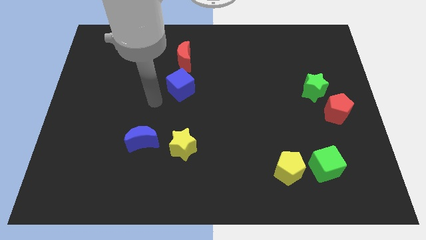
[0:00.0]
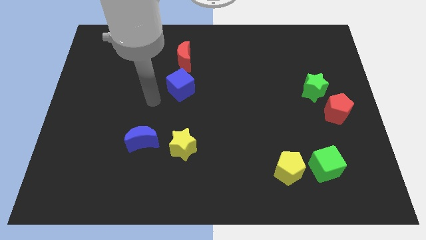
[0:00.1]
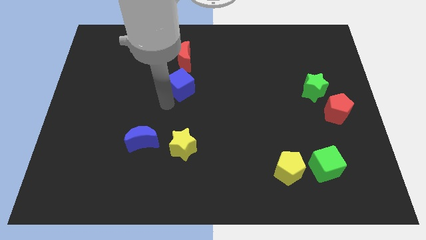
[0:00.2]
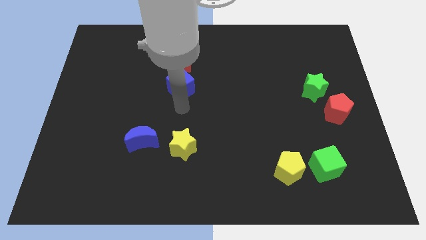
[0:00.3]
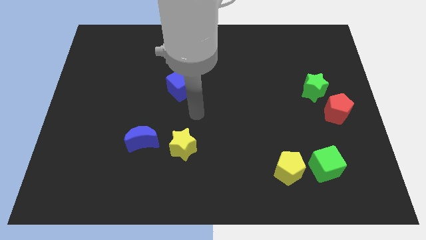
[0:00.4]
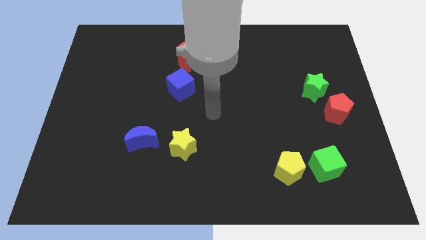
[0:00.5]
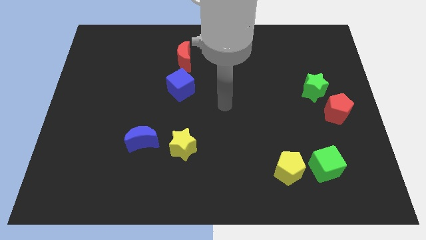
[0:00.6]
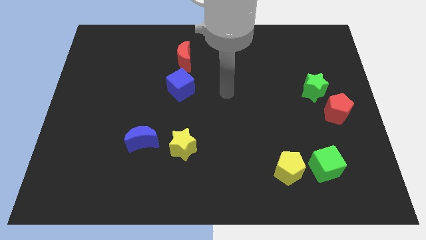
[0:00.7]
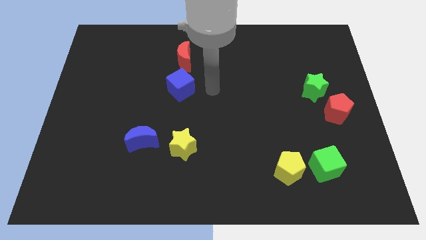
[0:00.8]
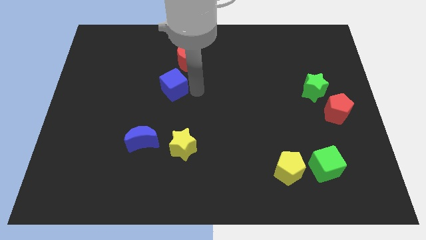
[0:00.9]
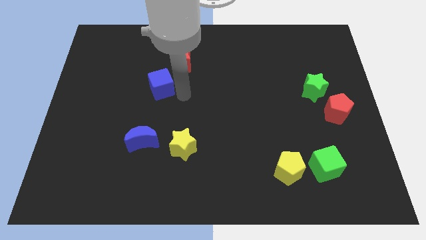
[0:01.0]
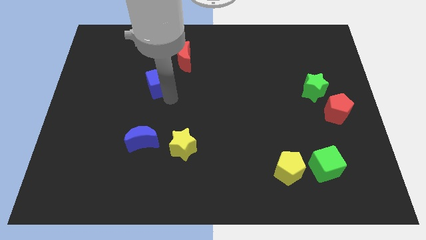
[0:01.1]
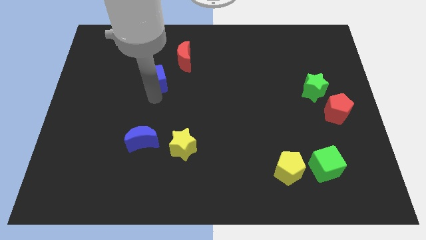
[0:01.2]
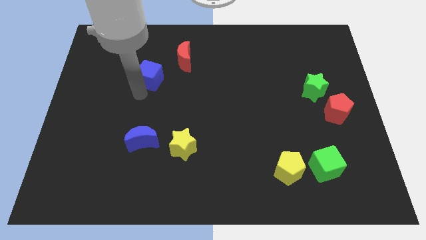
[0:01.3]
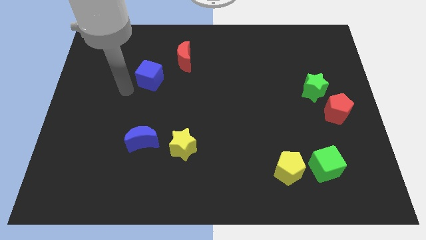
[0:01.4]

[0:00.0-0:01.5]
place blue cube left diagonally towards red crescent

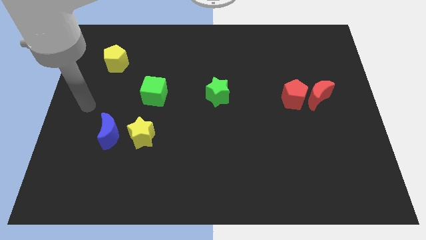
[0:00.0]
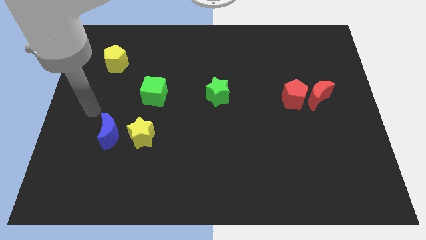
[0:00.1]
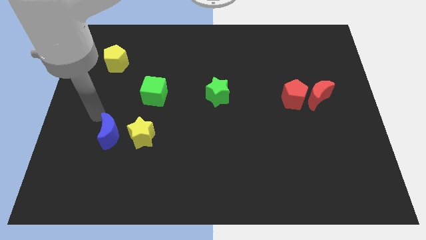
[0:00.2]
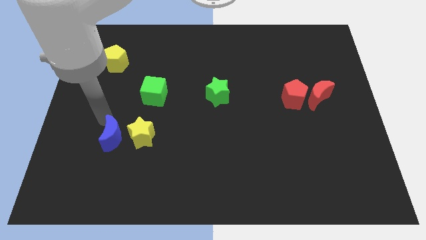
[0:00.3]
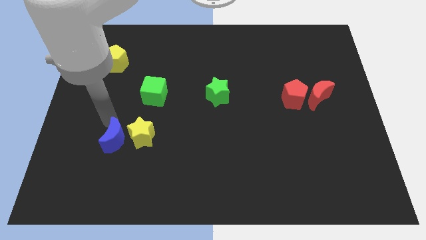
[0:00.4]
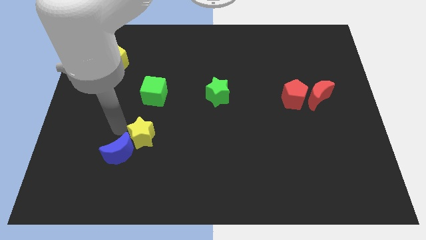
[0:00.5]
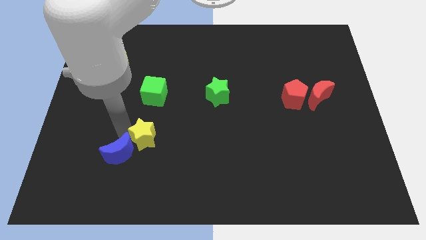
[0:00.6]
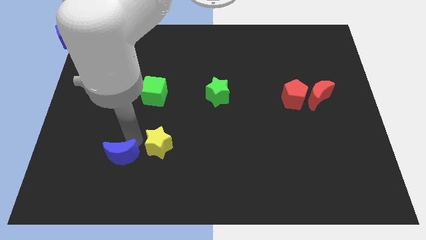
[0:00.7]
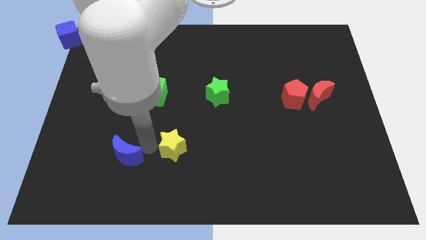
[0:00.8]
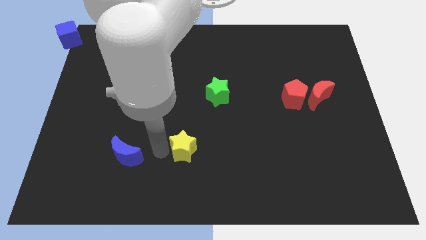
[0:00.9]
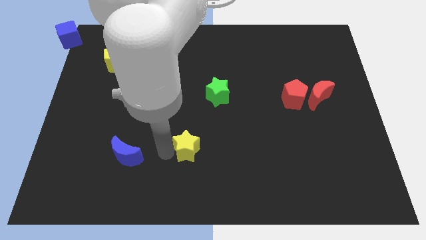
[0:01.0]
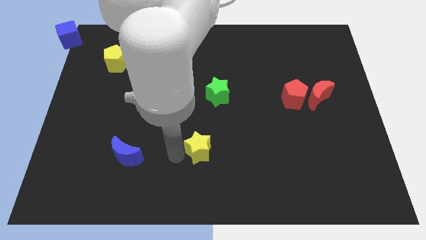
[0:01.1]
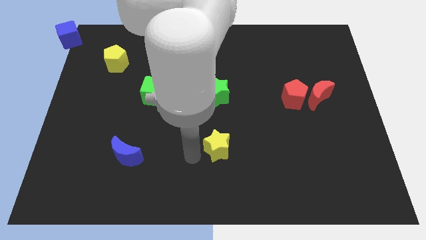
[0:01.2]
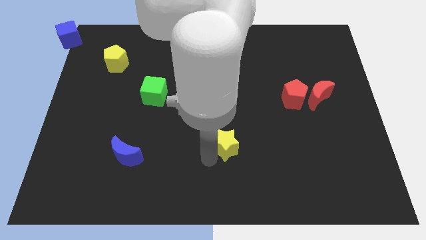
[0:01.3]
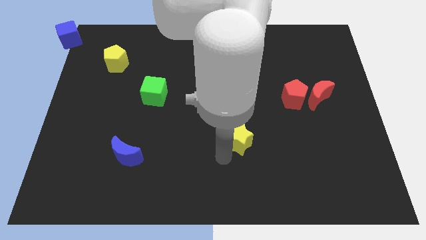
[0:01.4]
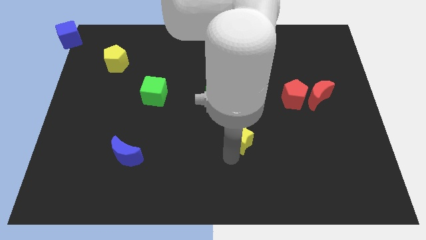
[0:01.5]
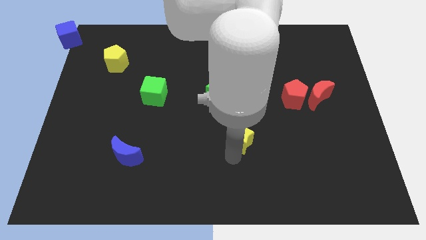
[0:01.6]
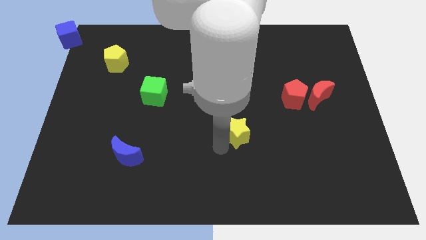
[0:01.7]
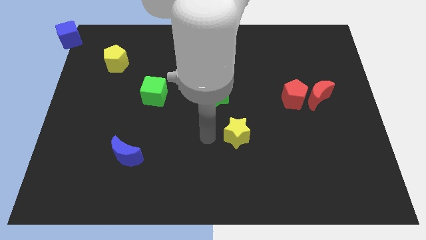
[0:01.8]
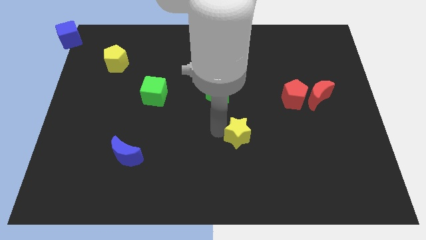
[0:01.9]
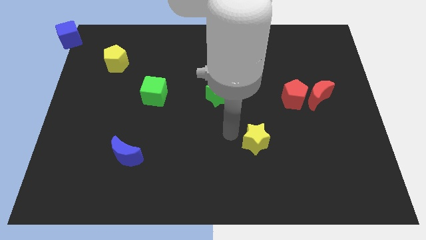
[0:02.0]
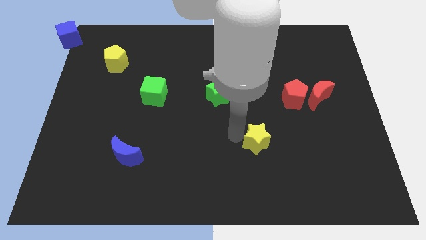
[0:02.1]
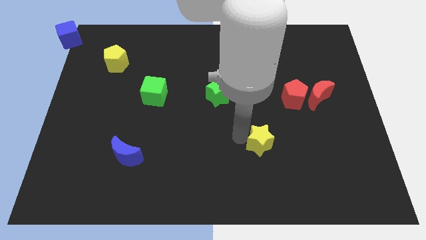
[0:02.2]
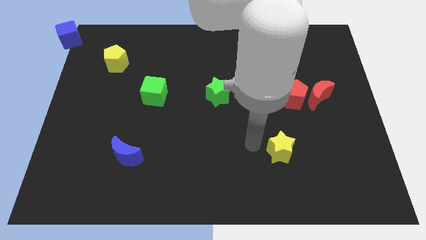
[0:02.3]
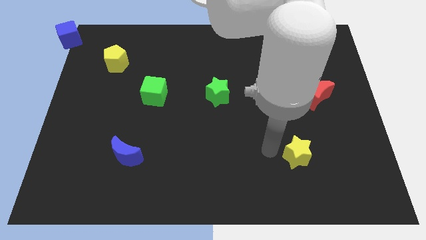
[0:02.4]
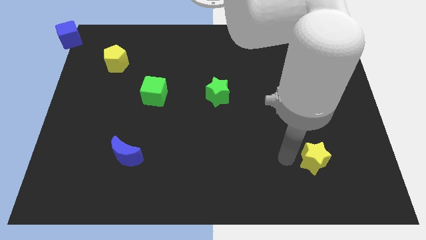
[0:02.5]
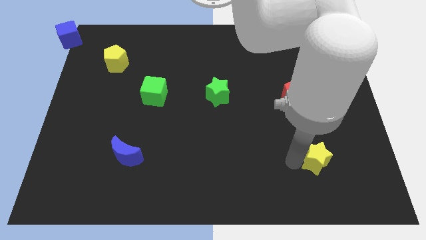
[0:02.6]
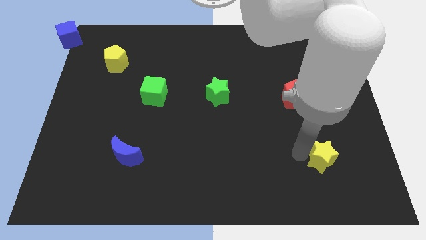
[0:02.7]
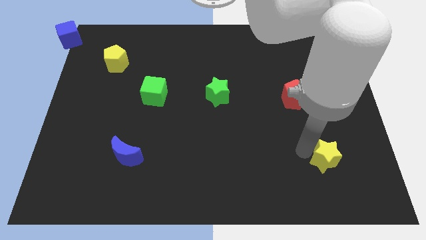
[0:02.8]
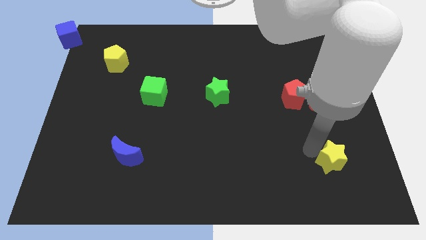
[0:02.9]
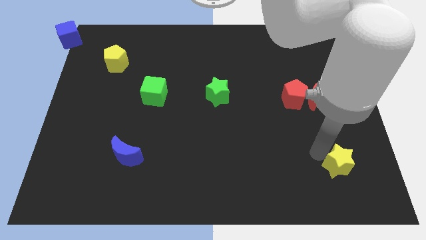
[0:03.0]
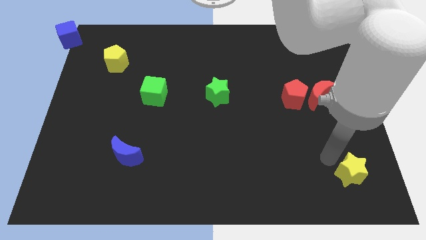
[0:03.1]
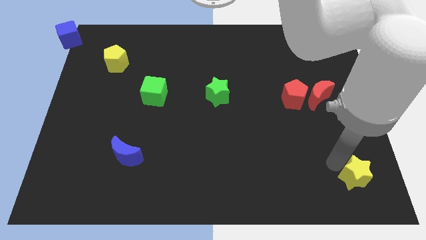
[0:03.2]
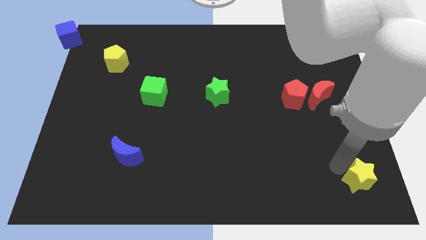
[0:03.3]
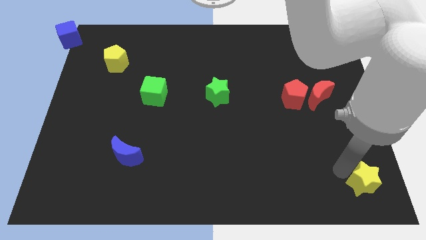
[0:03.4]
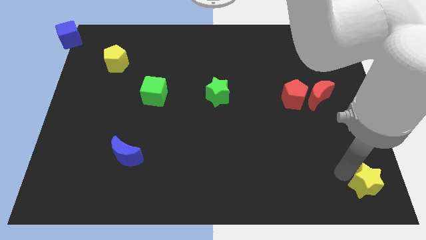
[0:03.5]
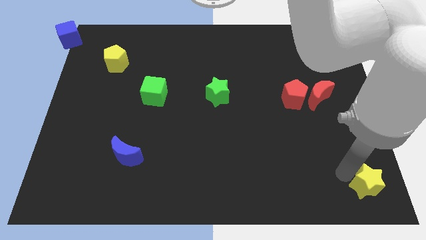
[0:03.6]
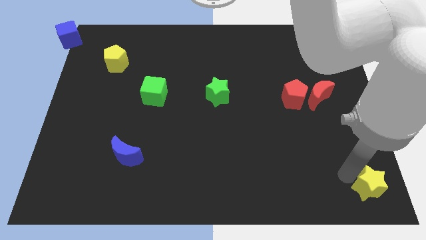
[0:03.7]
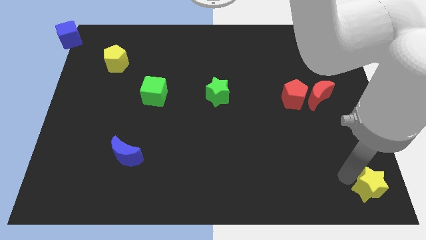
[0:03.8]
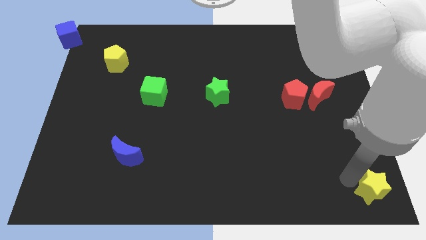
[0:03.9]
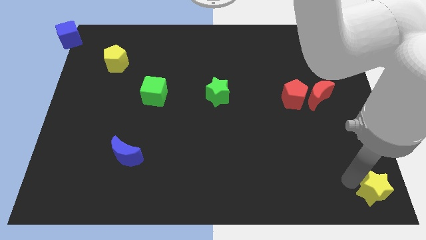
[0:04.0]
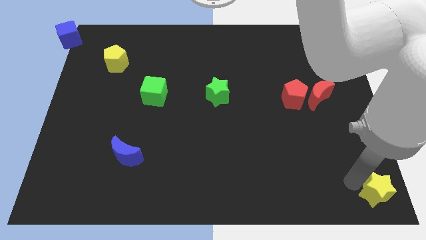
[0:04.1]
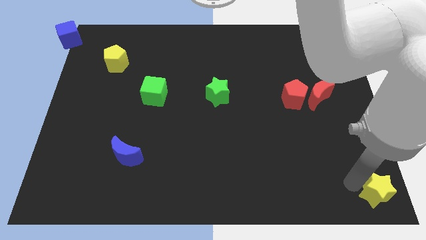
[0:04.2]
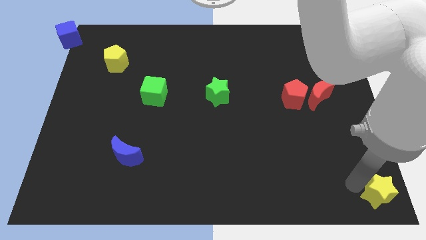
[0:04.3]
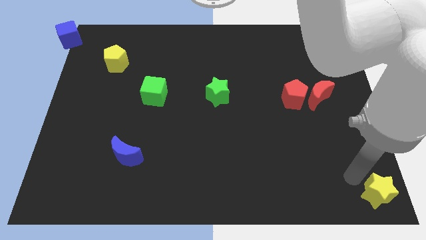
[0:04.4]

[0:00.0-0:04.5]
push the yellow star towards the bottom right corner

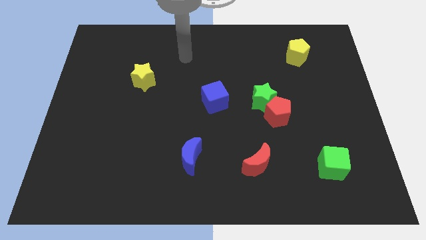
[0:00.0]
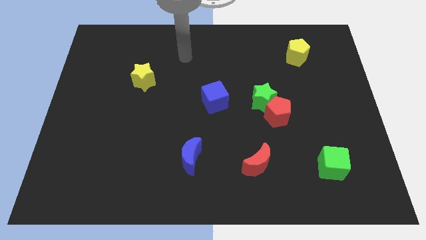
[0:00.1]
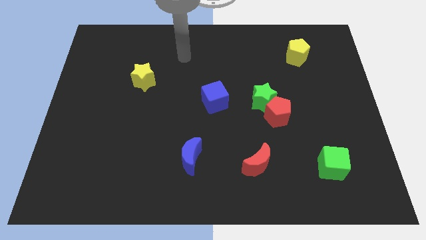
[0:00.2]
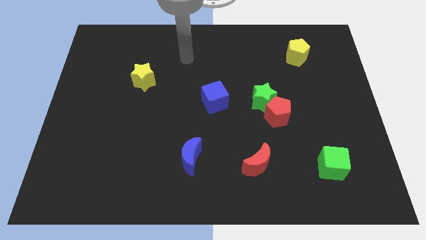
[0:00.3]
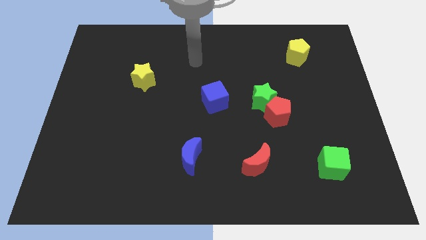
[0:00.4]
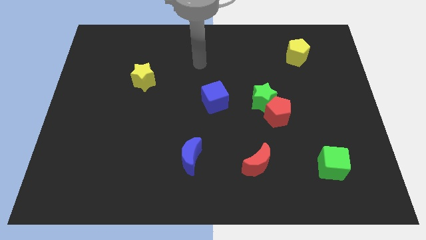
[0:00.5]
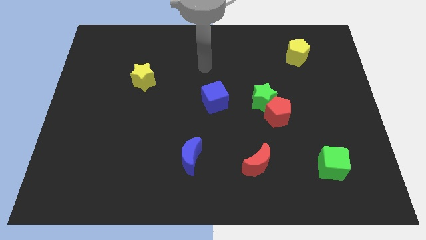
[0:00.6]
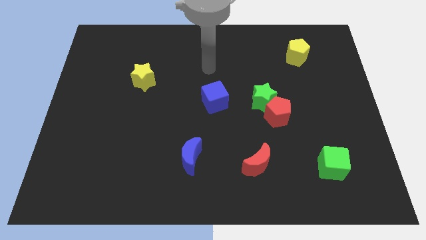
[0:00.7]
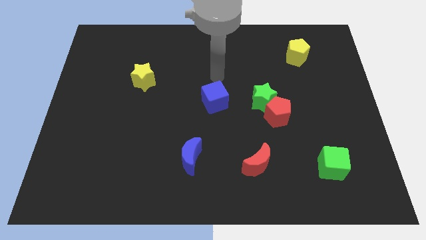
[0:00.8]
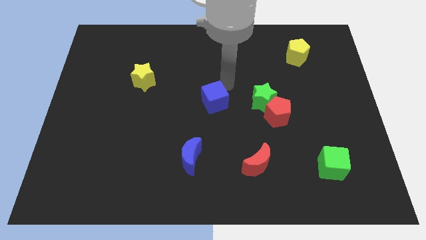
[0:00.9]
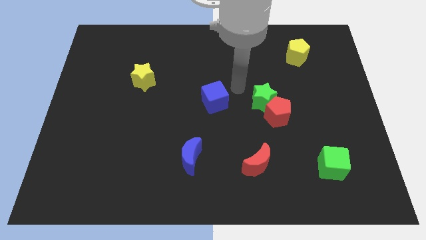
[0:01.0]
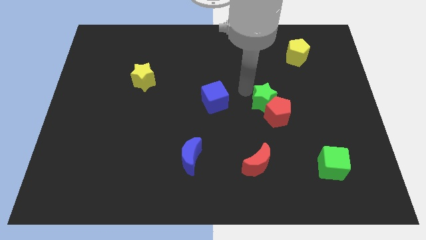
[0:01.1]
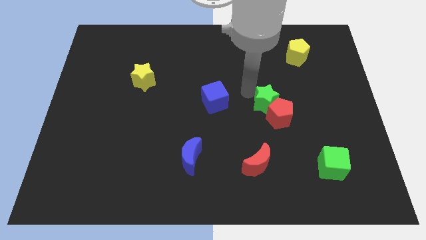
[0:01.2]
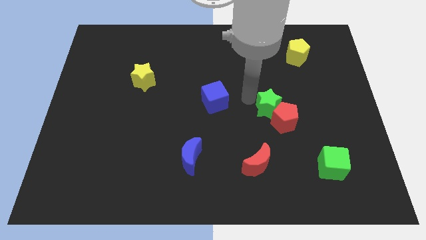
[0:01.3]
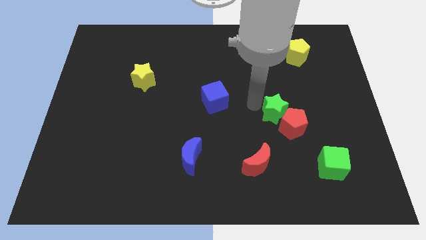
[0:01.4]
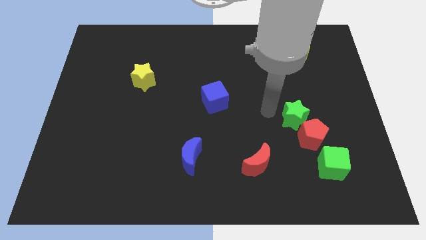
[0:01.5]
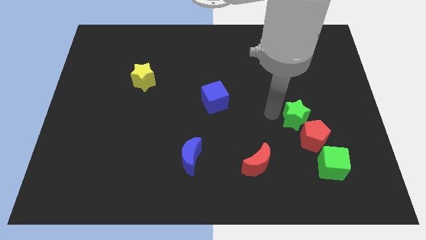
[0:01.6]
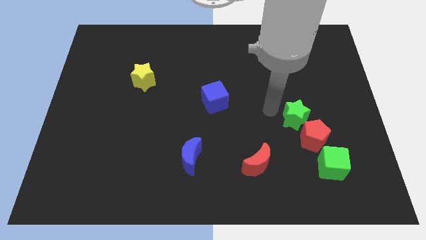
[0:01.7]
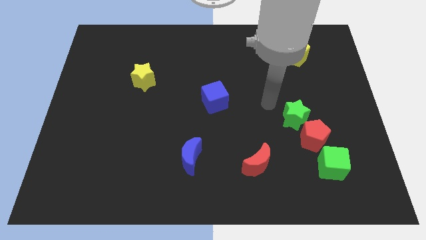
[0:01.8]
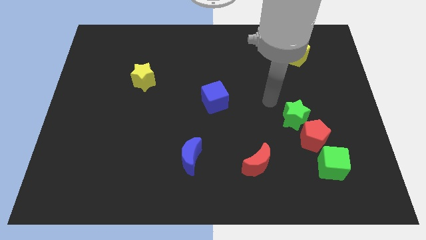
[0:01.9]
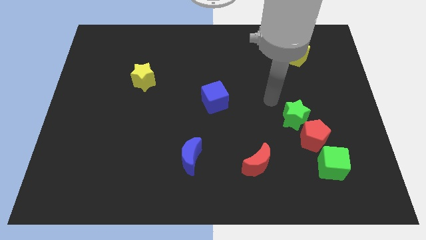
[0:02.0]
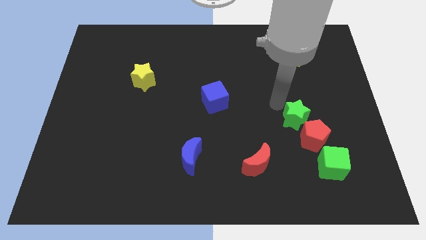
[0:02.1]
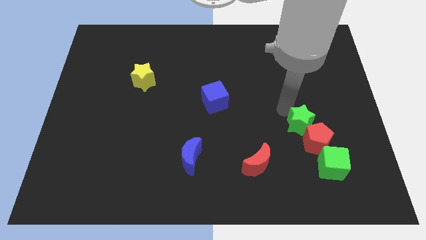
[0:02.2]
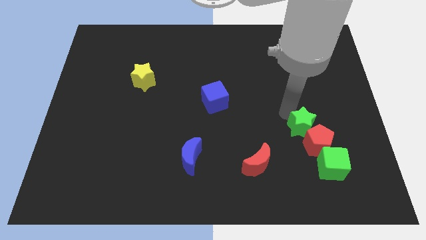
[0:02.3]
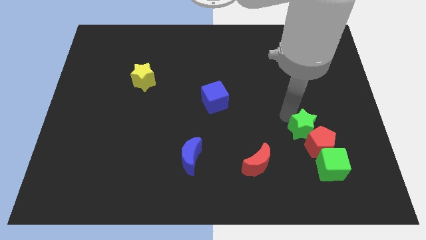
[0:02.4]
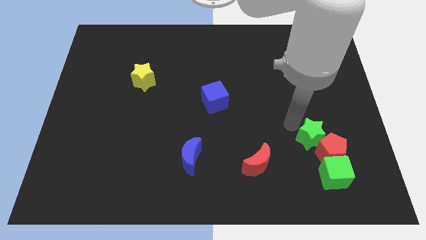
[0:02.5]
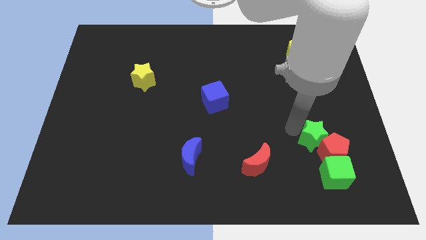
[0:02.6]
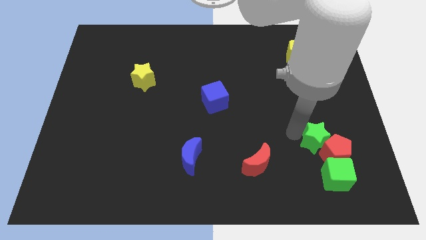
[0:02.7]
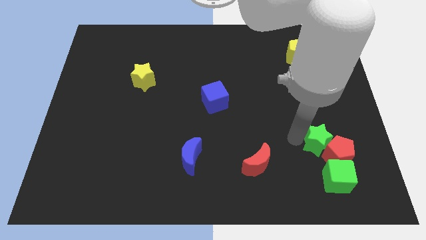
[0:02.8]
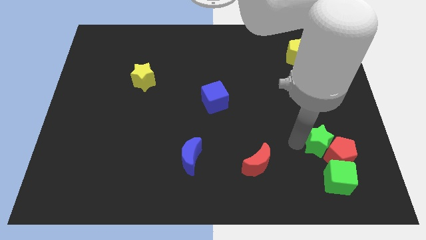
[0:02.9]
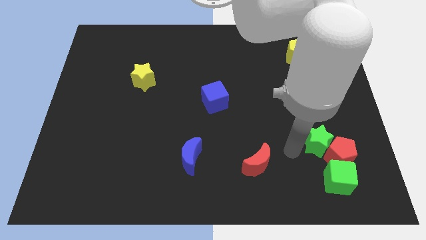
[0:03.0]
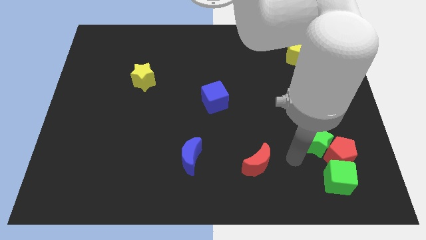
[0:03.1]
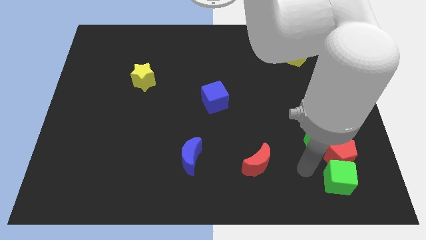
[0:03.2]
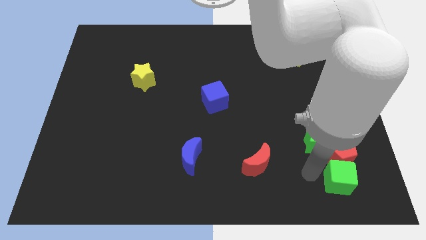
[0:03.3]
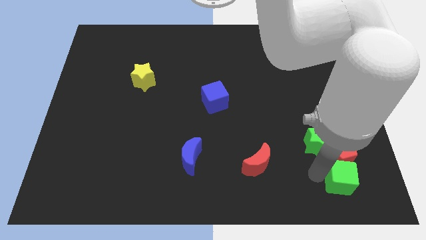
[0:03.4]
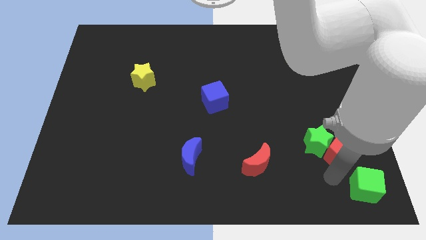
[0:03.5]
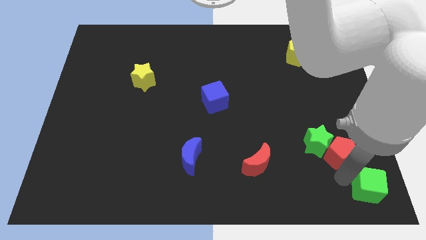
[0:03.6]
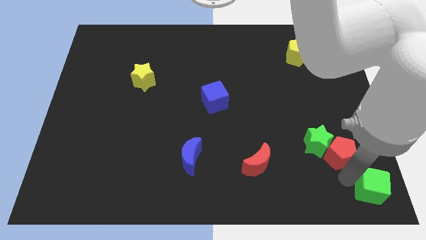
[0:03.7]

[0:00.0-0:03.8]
push the green blocks along with the red pentagon towards the bottom right to the board
